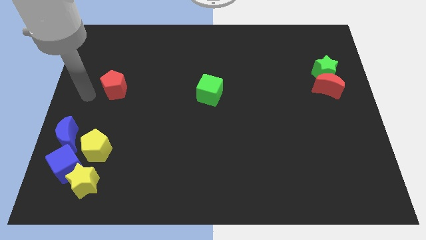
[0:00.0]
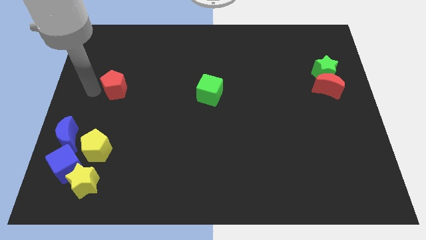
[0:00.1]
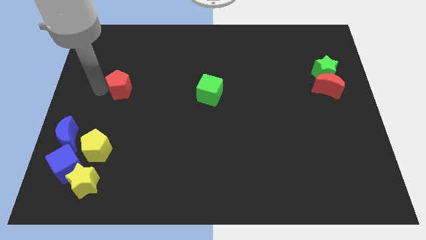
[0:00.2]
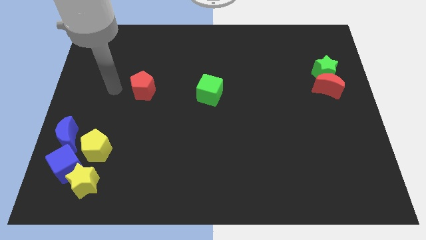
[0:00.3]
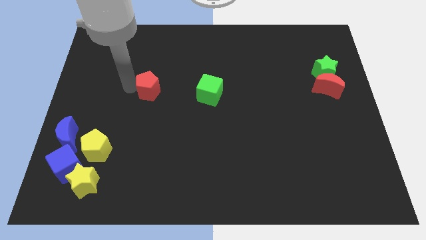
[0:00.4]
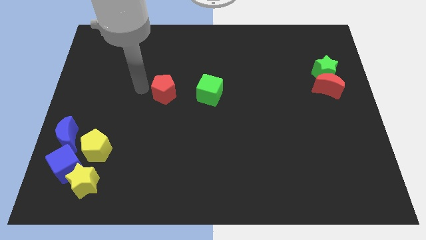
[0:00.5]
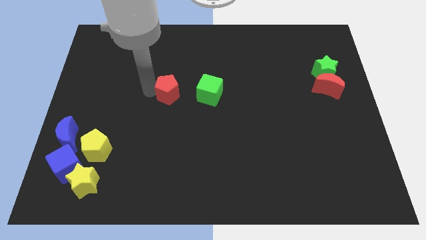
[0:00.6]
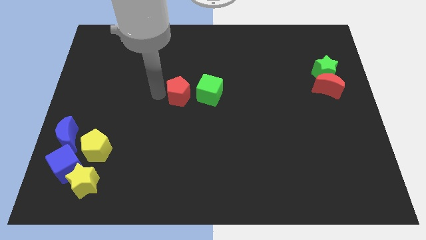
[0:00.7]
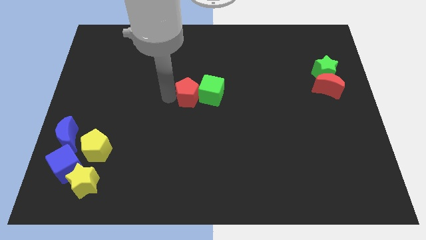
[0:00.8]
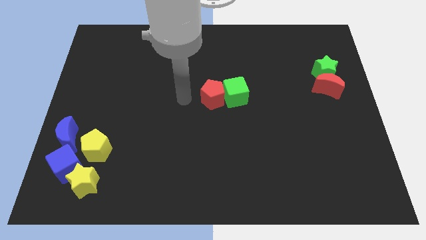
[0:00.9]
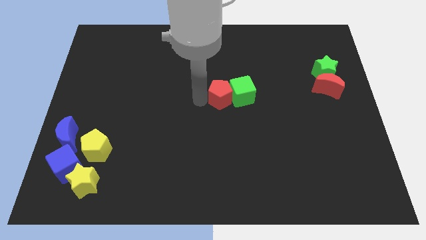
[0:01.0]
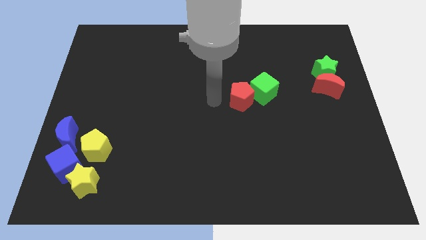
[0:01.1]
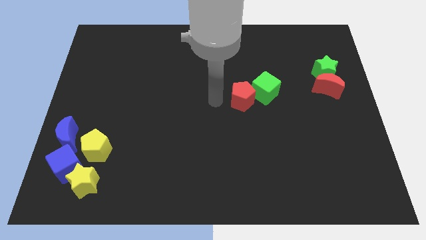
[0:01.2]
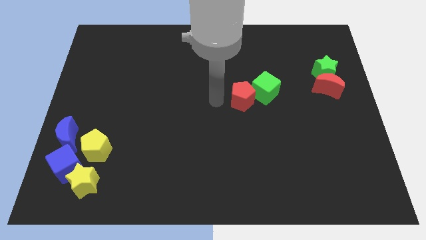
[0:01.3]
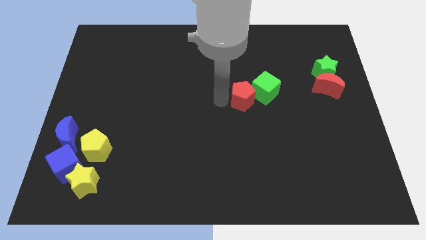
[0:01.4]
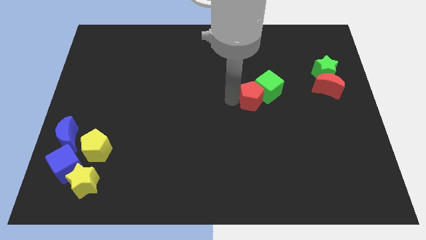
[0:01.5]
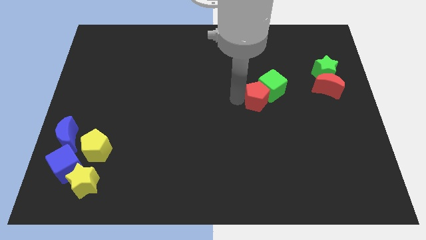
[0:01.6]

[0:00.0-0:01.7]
push the red pentagon into the green cube

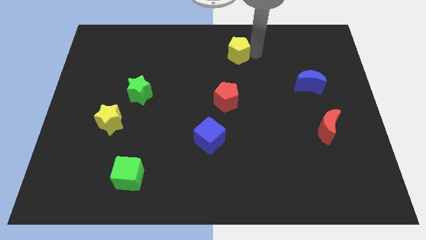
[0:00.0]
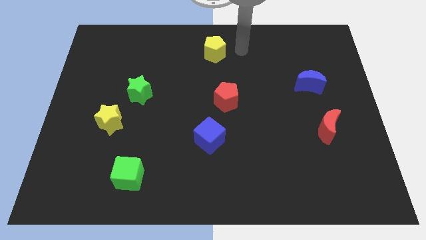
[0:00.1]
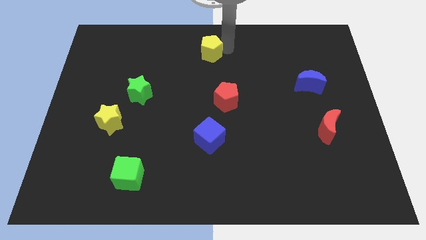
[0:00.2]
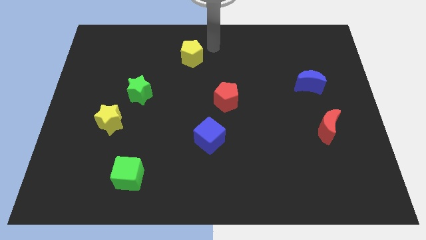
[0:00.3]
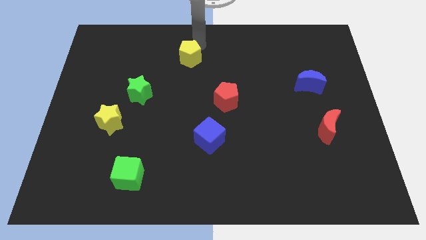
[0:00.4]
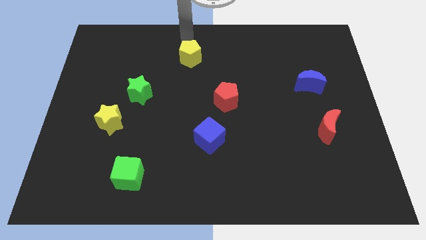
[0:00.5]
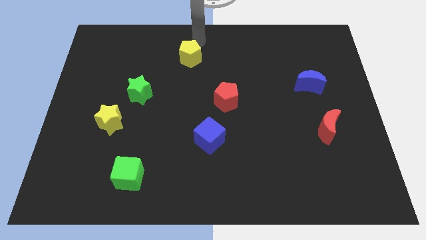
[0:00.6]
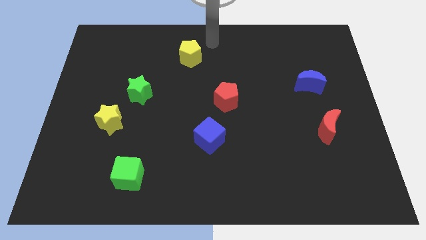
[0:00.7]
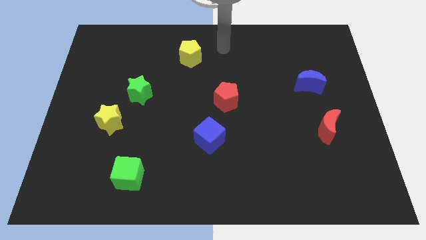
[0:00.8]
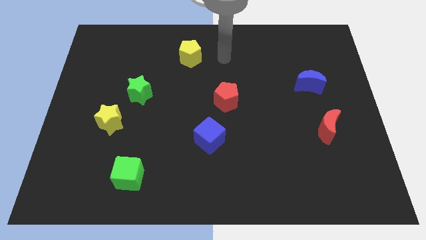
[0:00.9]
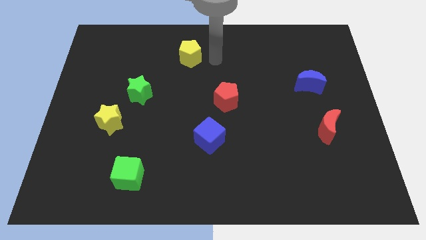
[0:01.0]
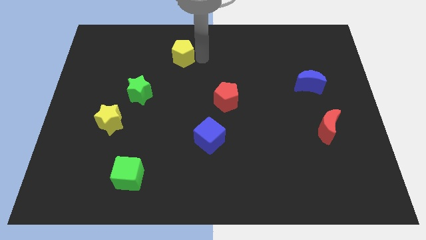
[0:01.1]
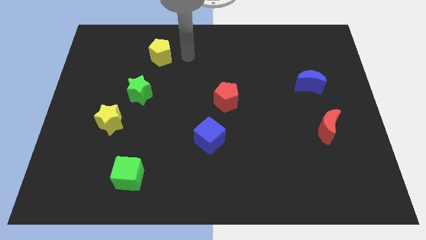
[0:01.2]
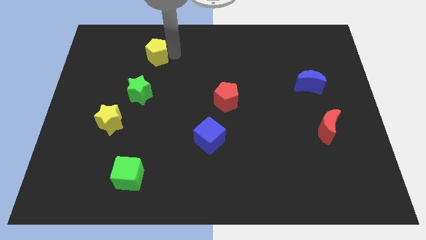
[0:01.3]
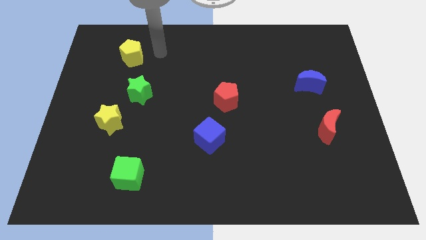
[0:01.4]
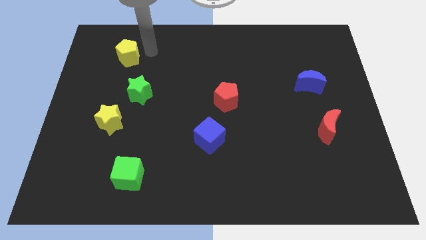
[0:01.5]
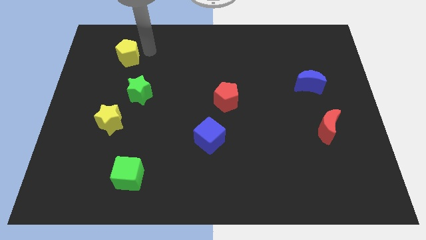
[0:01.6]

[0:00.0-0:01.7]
push the yellow pentagon towards the top left

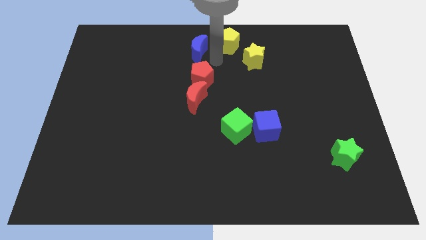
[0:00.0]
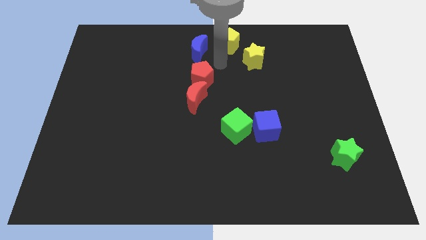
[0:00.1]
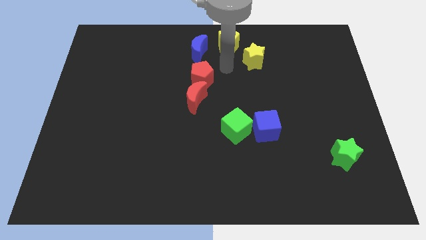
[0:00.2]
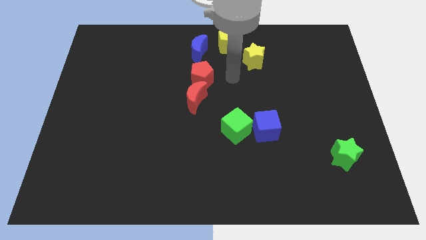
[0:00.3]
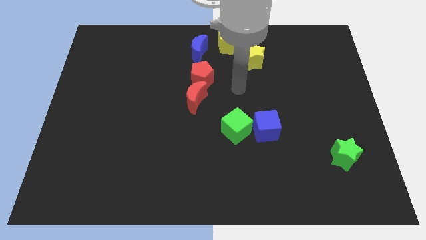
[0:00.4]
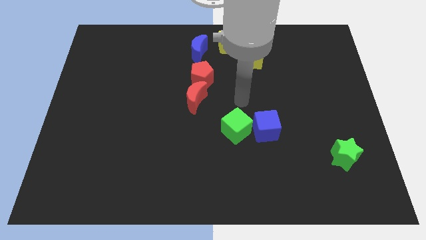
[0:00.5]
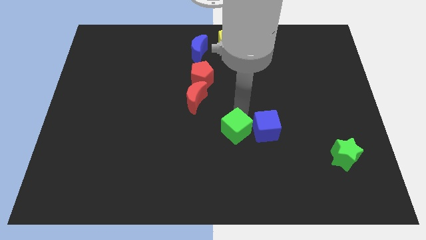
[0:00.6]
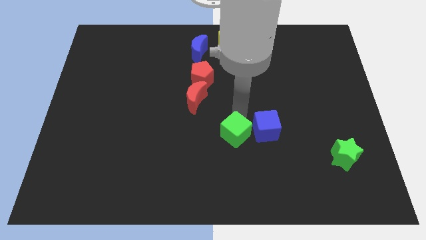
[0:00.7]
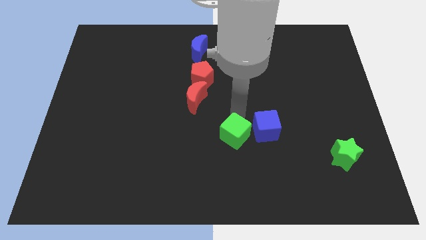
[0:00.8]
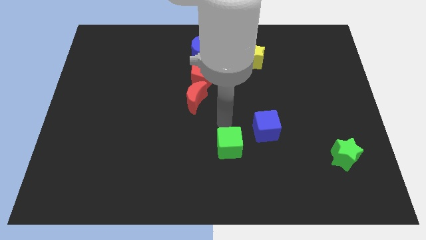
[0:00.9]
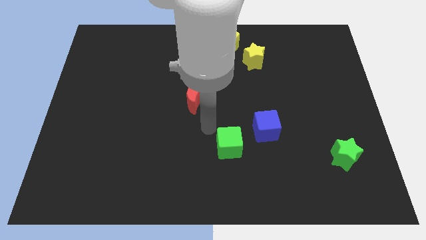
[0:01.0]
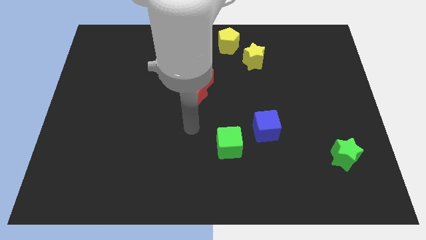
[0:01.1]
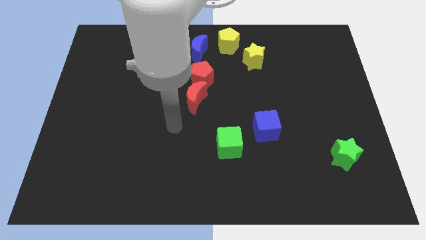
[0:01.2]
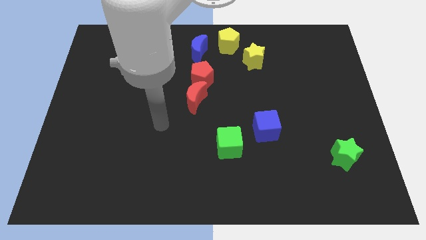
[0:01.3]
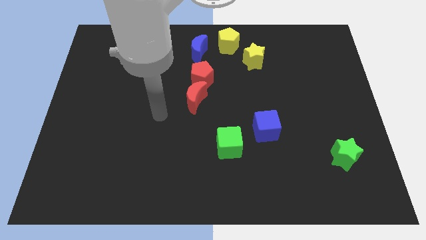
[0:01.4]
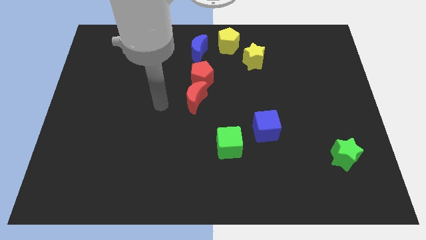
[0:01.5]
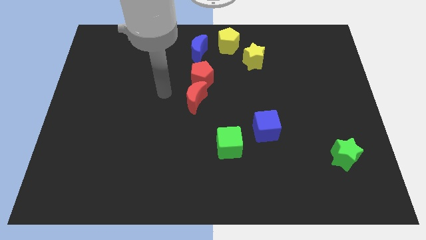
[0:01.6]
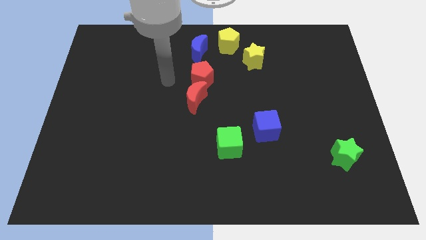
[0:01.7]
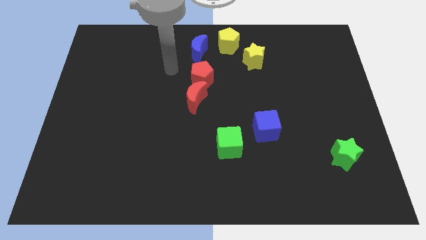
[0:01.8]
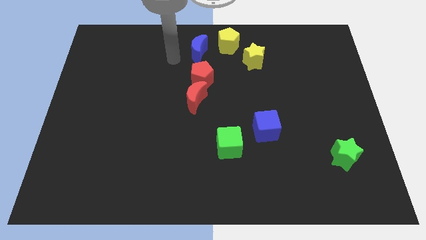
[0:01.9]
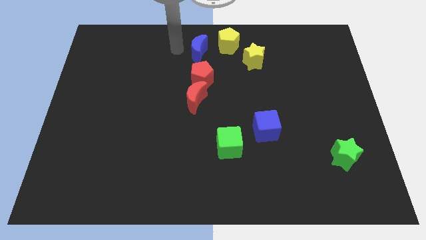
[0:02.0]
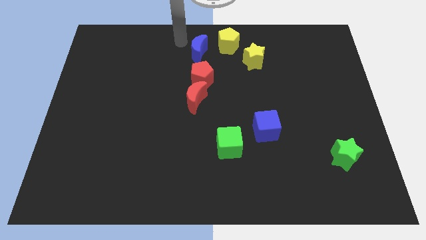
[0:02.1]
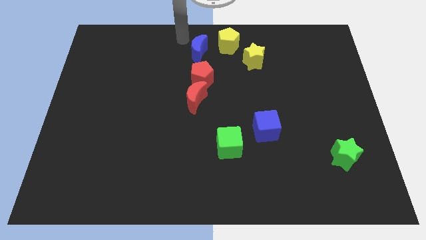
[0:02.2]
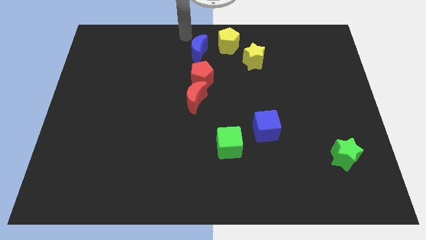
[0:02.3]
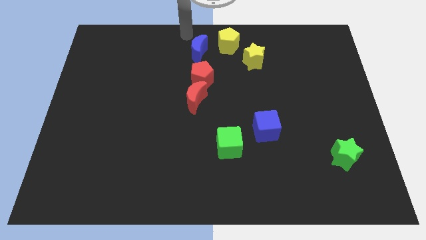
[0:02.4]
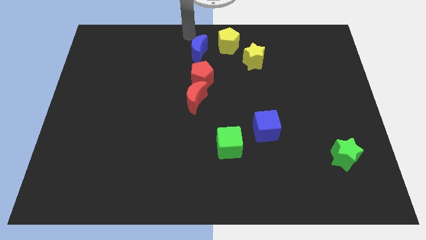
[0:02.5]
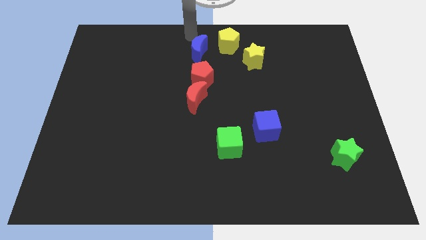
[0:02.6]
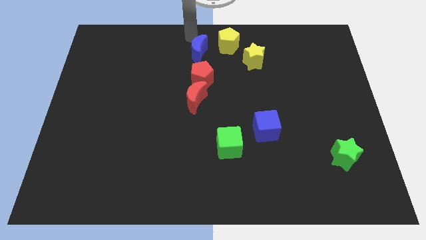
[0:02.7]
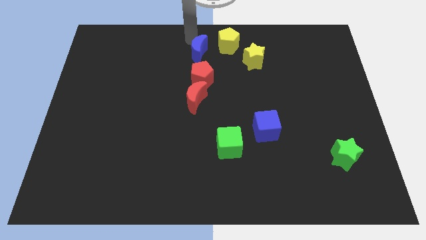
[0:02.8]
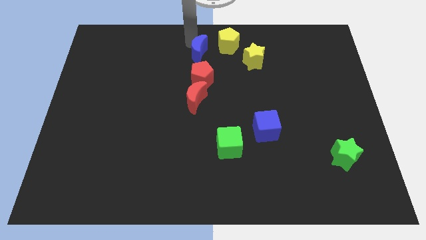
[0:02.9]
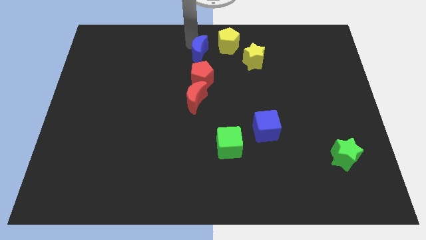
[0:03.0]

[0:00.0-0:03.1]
separate the green square from the blue square

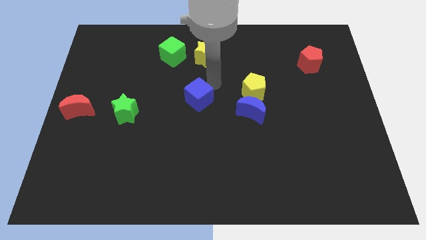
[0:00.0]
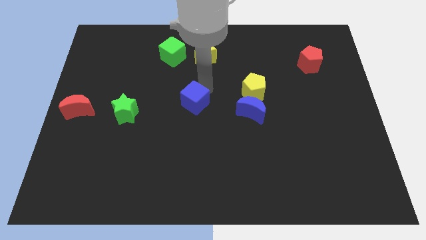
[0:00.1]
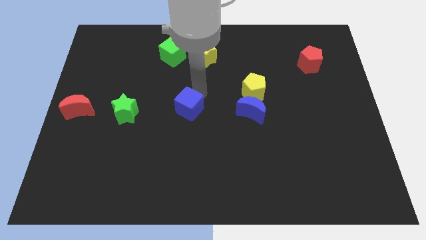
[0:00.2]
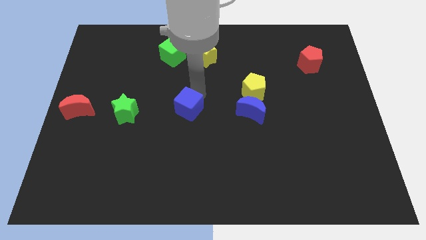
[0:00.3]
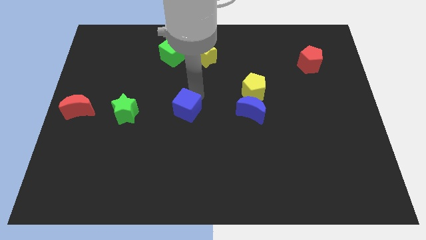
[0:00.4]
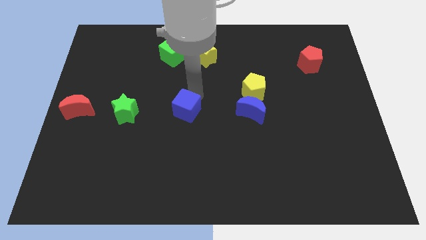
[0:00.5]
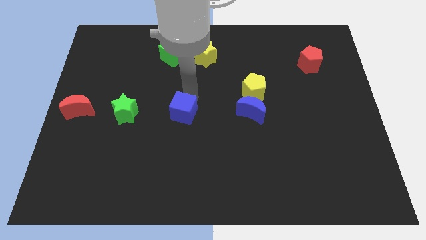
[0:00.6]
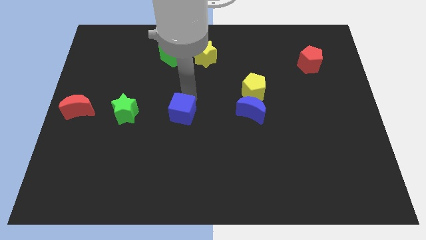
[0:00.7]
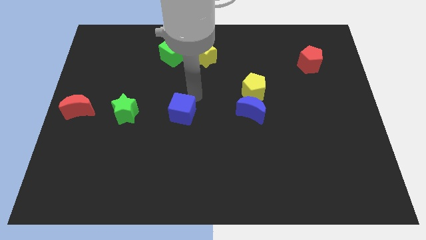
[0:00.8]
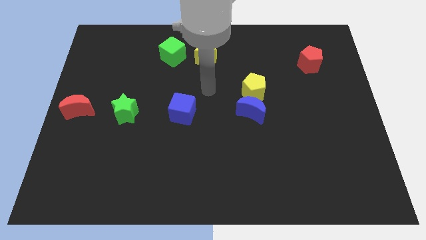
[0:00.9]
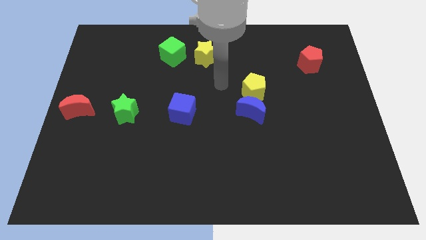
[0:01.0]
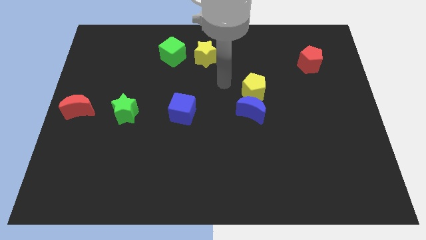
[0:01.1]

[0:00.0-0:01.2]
place blue cube to the center

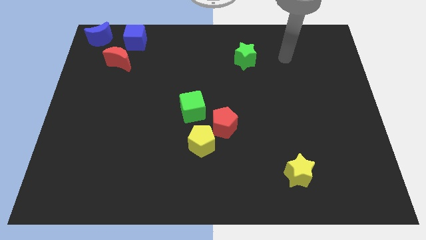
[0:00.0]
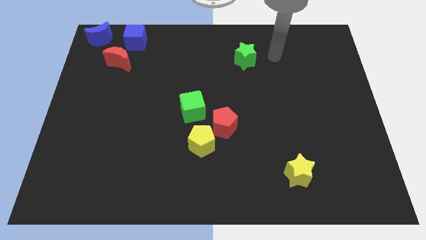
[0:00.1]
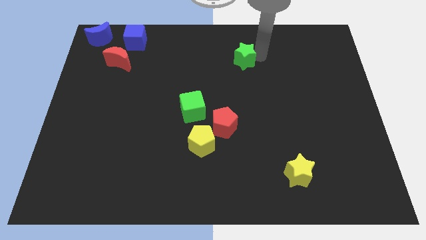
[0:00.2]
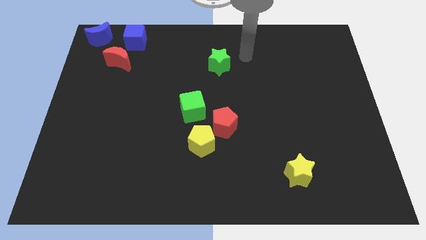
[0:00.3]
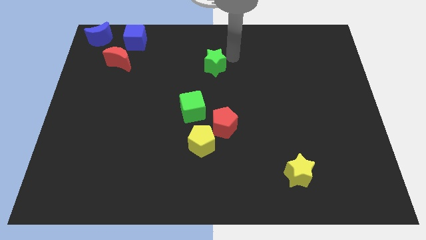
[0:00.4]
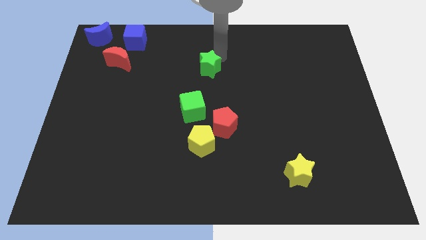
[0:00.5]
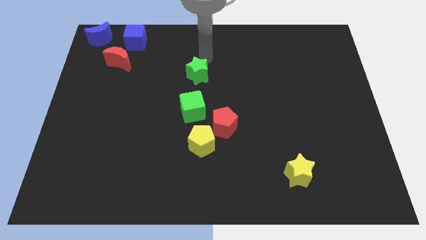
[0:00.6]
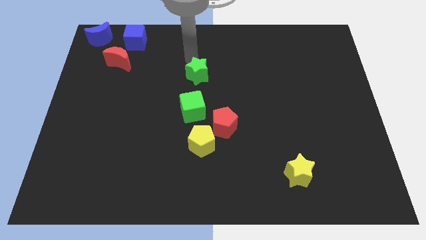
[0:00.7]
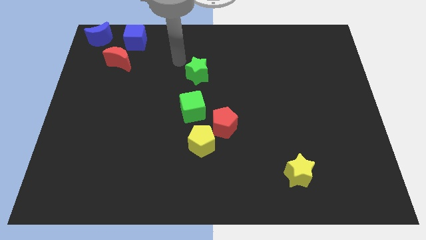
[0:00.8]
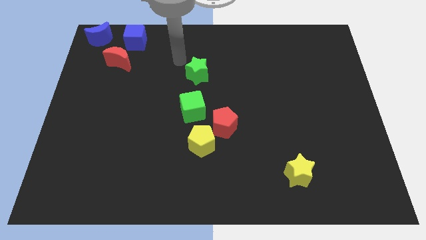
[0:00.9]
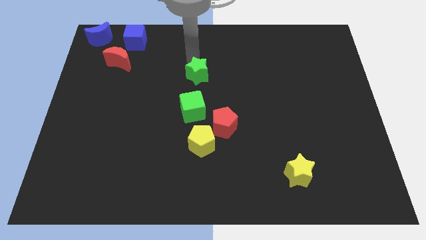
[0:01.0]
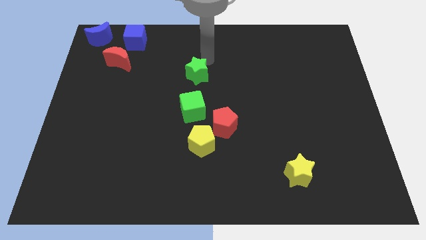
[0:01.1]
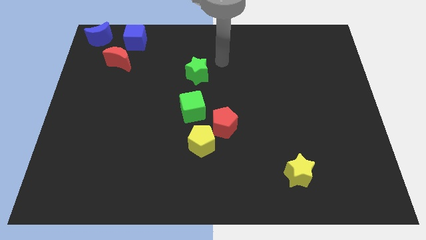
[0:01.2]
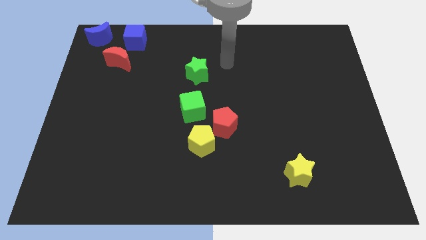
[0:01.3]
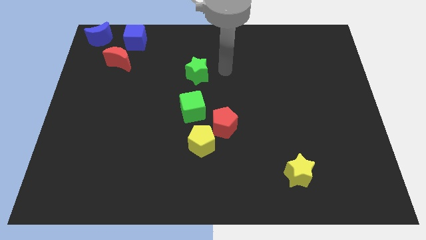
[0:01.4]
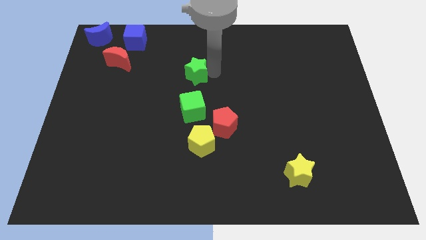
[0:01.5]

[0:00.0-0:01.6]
push green star above green cube
